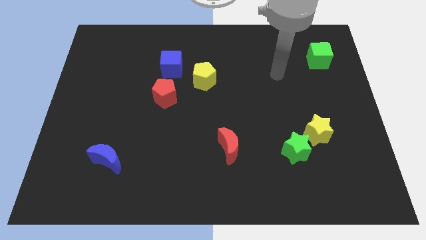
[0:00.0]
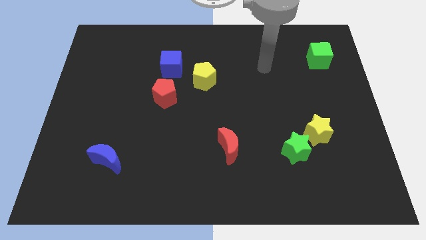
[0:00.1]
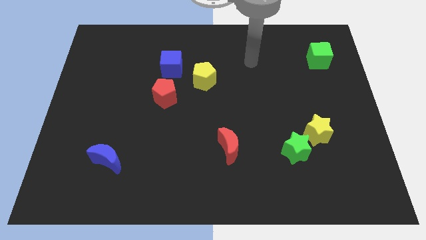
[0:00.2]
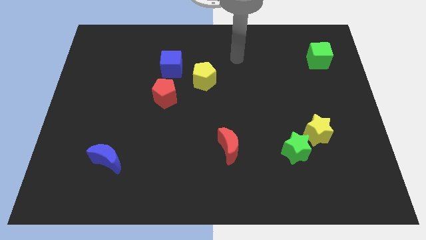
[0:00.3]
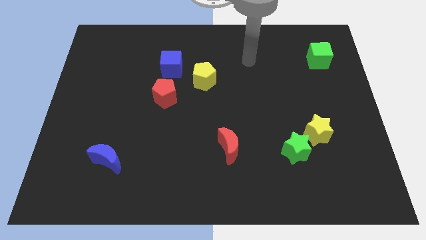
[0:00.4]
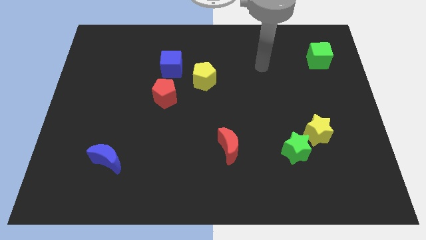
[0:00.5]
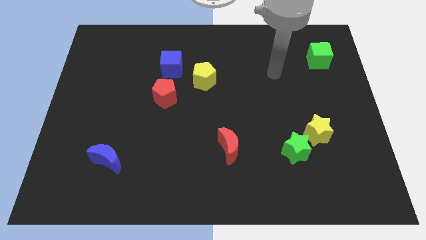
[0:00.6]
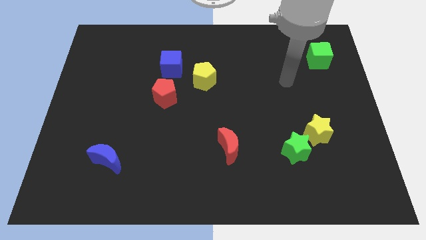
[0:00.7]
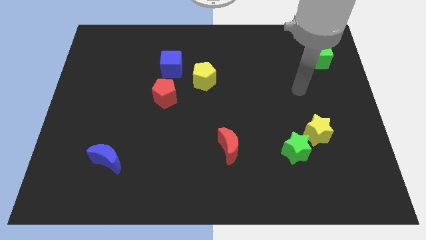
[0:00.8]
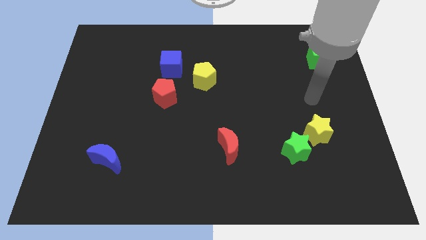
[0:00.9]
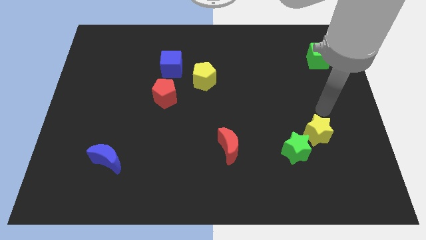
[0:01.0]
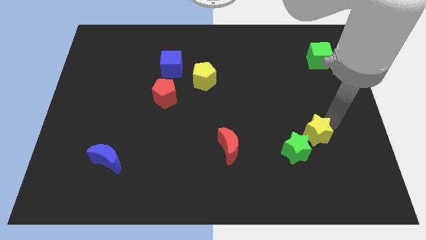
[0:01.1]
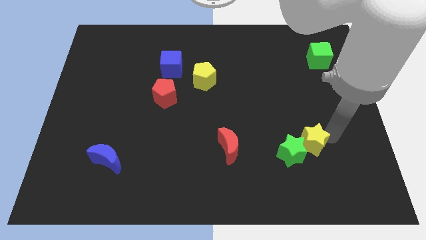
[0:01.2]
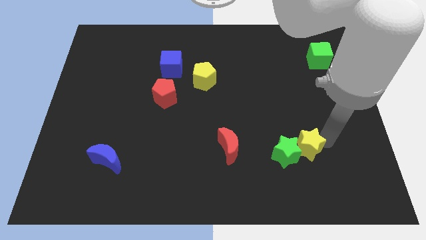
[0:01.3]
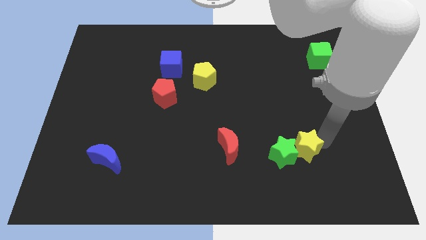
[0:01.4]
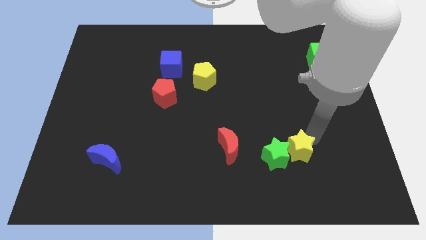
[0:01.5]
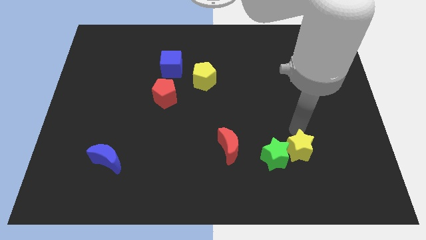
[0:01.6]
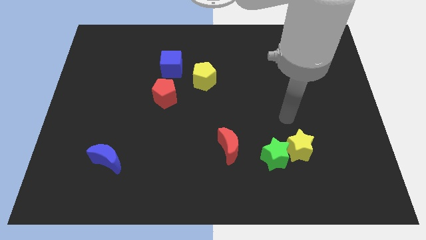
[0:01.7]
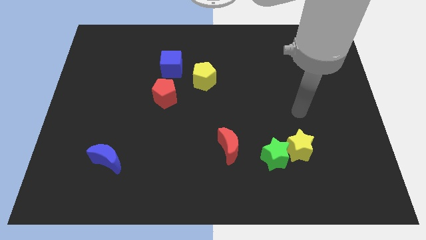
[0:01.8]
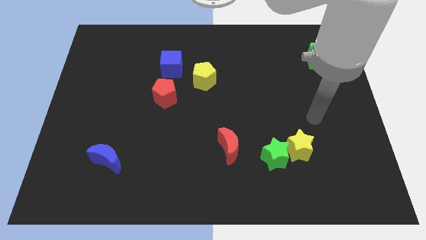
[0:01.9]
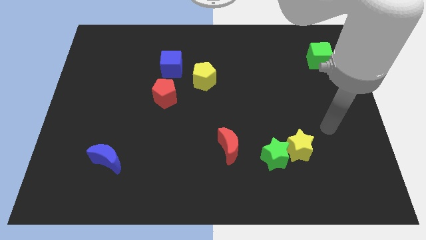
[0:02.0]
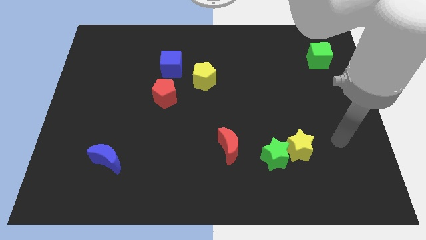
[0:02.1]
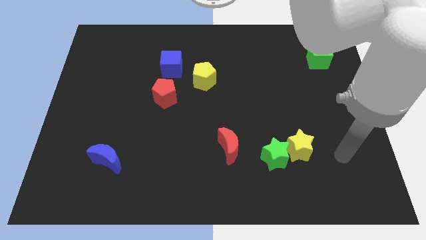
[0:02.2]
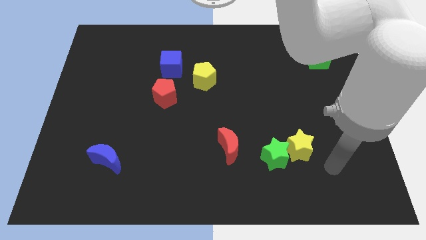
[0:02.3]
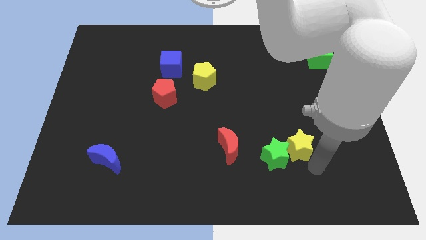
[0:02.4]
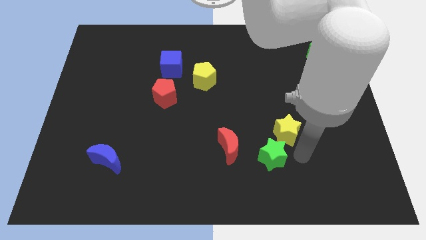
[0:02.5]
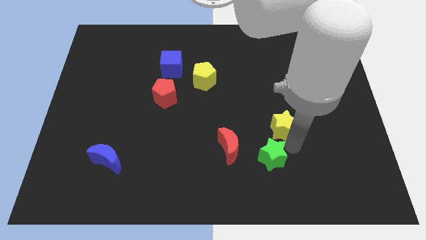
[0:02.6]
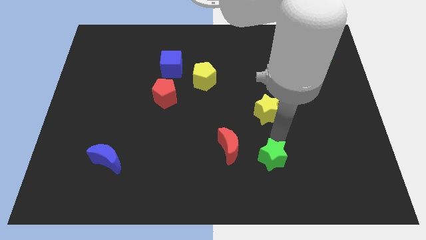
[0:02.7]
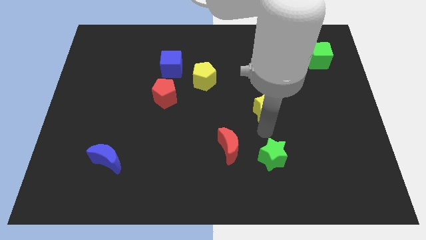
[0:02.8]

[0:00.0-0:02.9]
separate the yellow star from green star

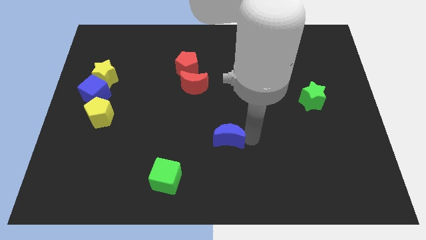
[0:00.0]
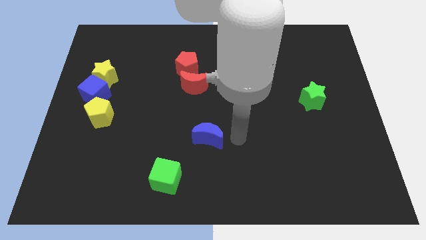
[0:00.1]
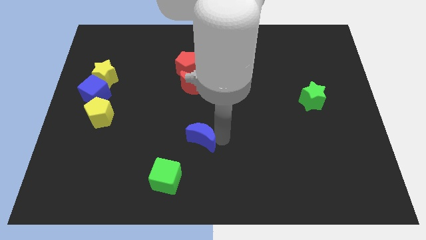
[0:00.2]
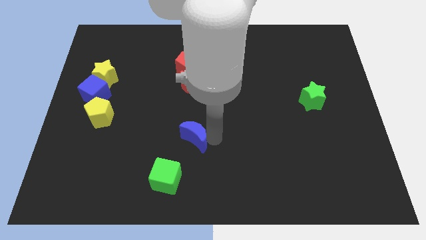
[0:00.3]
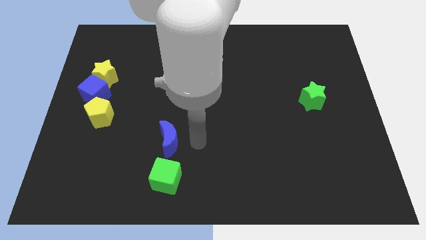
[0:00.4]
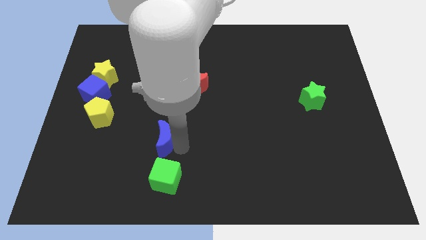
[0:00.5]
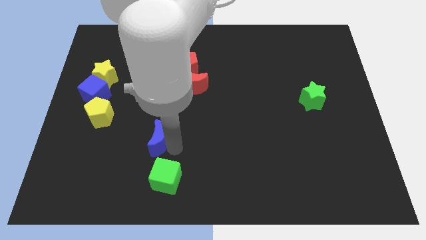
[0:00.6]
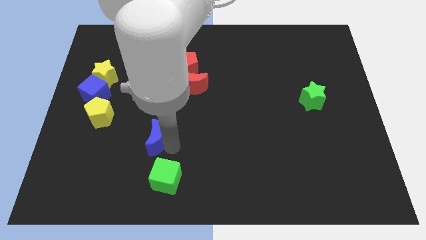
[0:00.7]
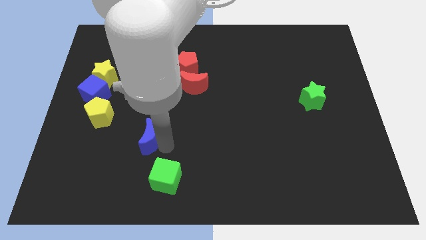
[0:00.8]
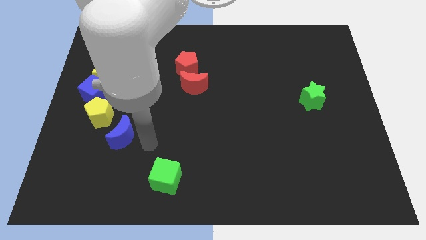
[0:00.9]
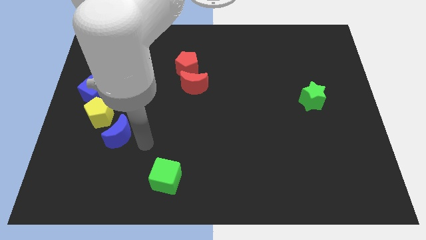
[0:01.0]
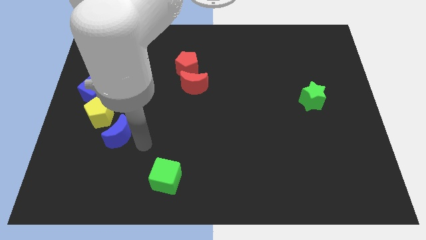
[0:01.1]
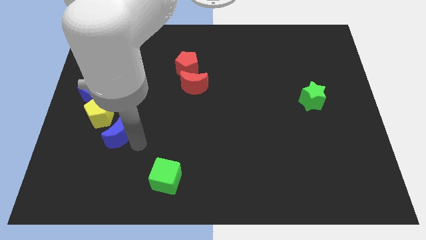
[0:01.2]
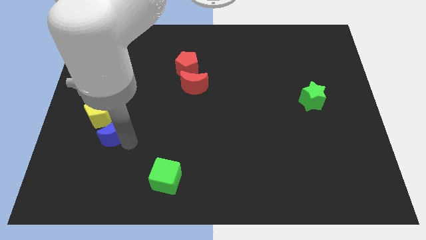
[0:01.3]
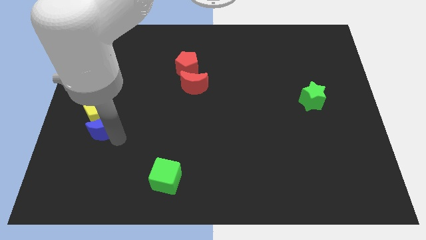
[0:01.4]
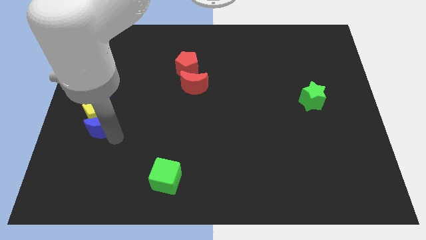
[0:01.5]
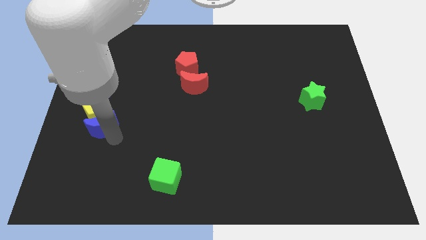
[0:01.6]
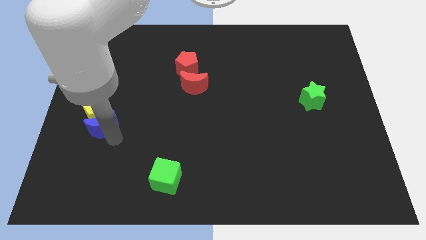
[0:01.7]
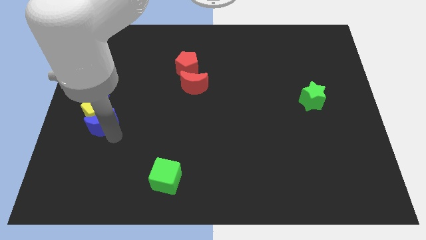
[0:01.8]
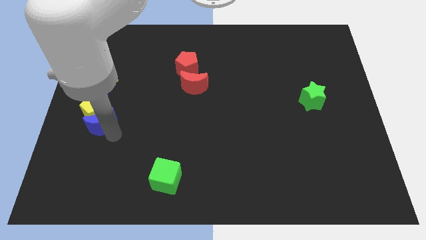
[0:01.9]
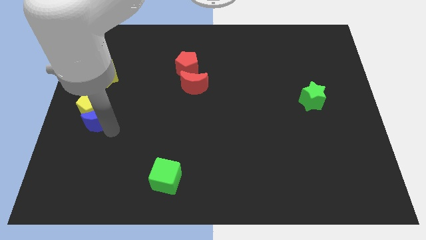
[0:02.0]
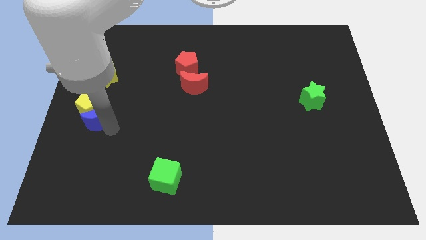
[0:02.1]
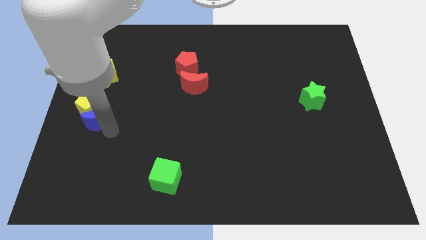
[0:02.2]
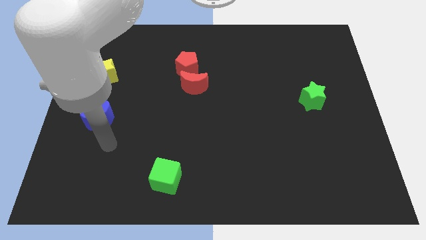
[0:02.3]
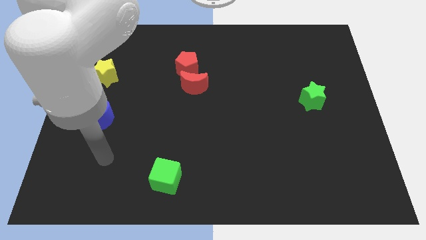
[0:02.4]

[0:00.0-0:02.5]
drag the blue moon below the yellow pentagon

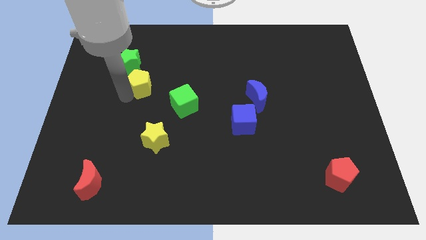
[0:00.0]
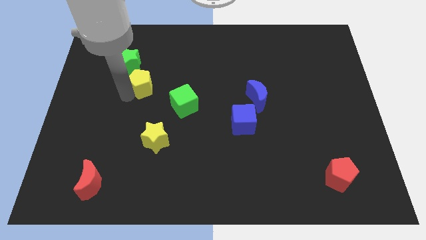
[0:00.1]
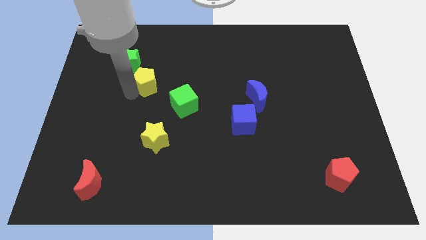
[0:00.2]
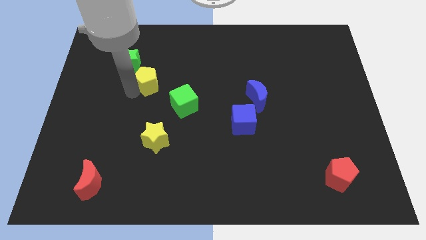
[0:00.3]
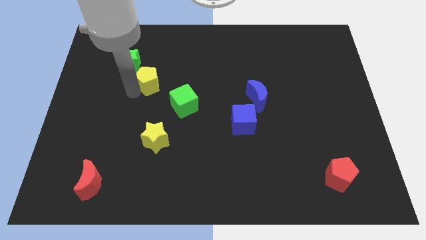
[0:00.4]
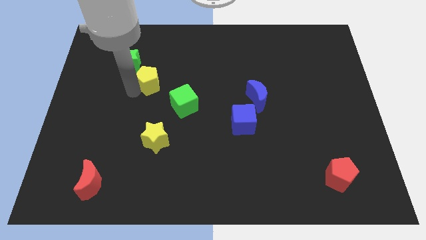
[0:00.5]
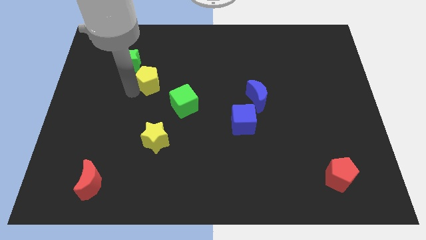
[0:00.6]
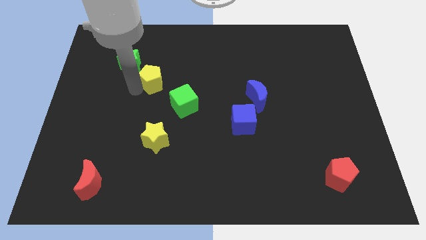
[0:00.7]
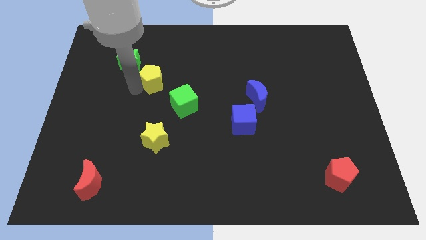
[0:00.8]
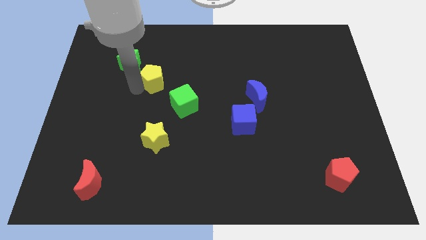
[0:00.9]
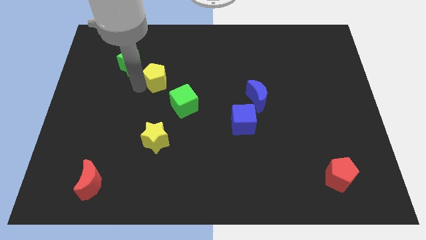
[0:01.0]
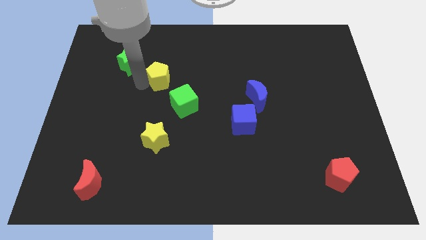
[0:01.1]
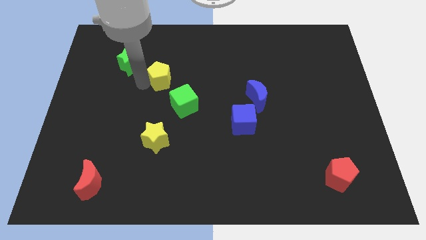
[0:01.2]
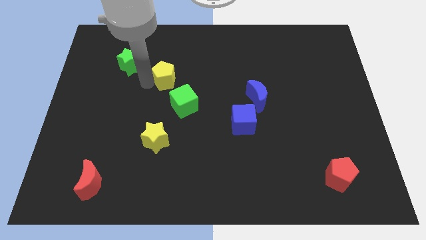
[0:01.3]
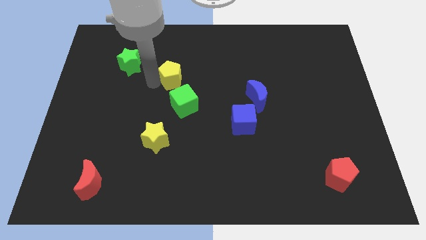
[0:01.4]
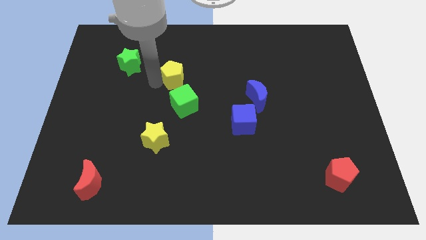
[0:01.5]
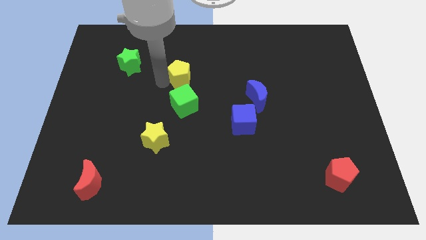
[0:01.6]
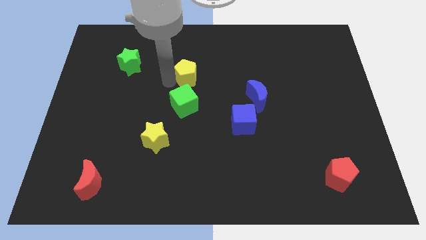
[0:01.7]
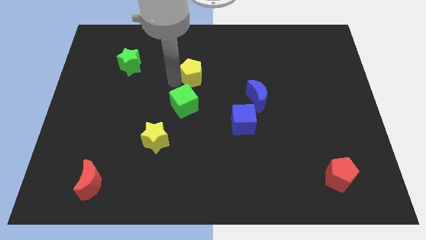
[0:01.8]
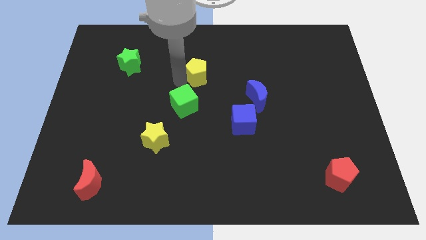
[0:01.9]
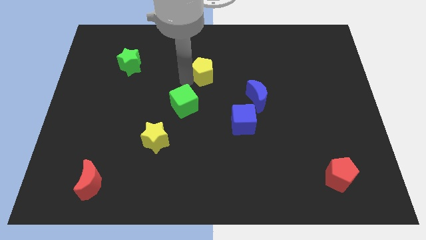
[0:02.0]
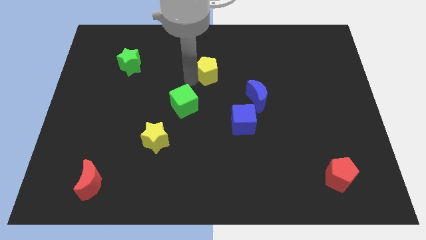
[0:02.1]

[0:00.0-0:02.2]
seperate yellow pentagon and green star

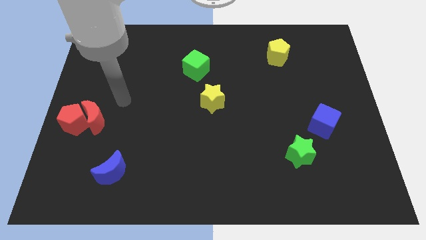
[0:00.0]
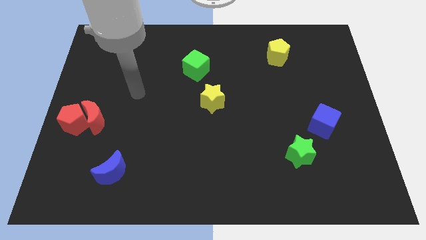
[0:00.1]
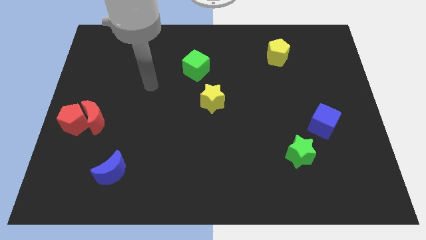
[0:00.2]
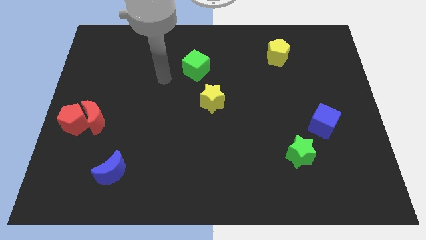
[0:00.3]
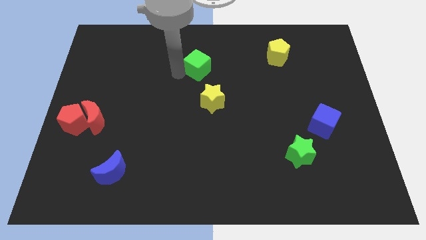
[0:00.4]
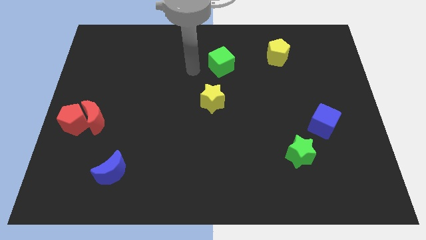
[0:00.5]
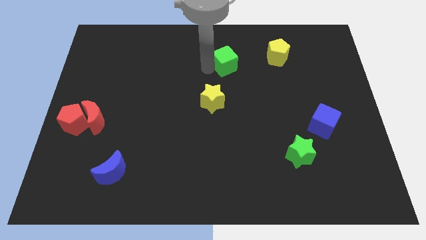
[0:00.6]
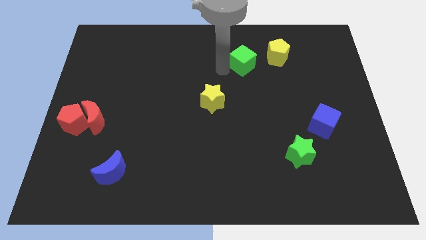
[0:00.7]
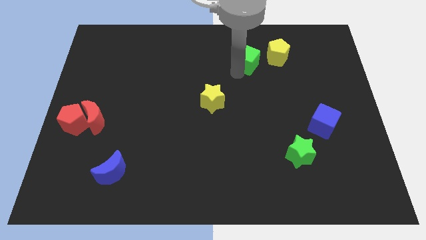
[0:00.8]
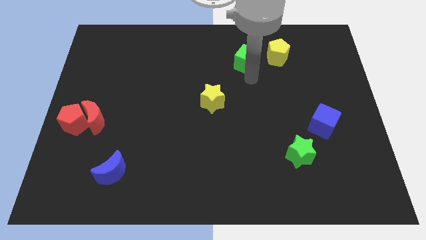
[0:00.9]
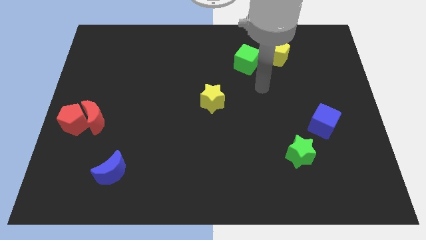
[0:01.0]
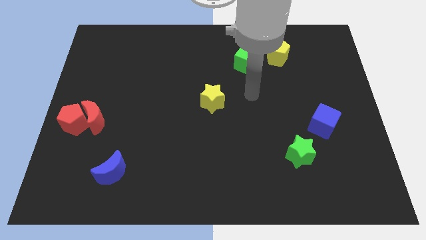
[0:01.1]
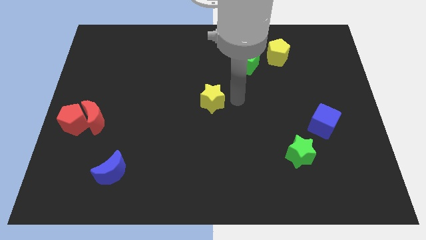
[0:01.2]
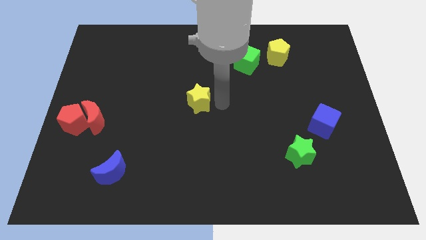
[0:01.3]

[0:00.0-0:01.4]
place the green cube left to the yellow pentagon
